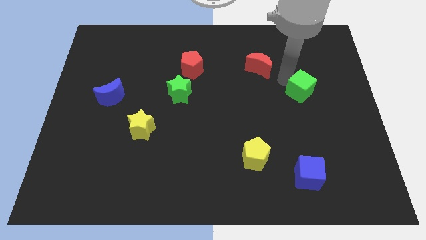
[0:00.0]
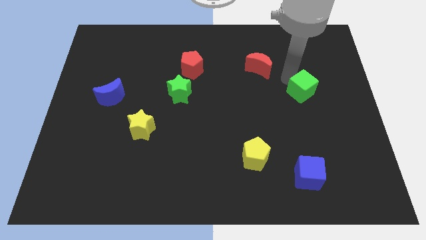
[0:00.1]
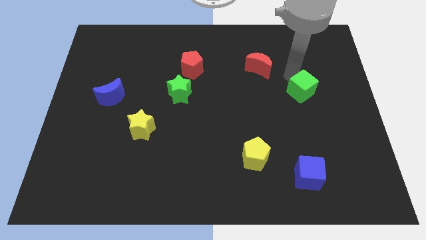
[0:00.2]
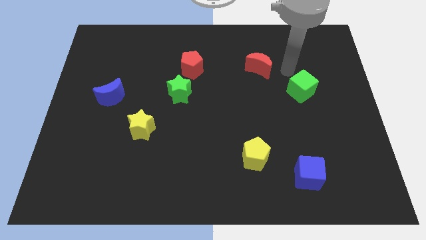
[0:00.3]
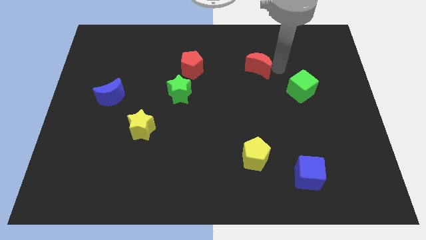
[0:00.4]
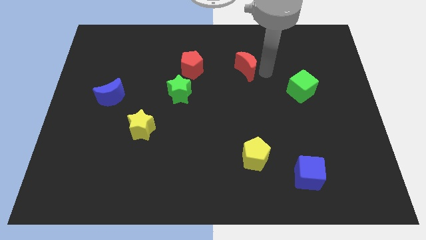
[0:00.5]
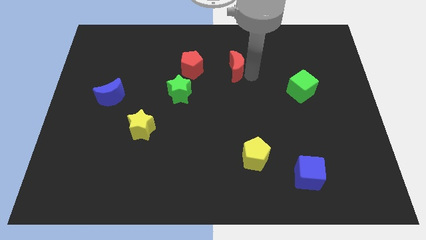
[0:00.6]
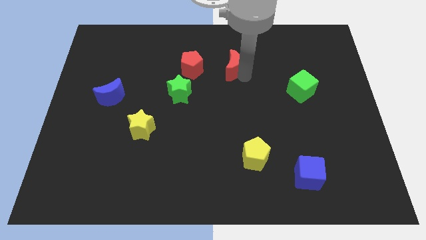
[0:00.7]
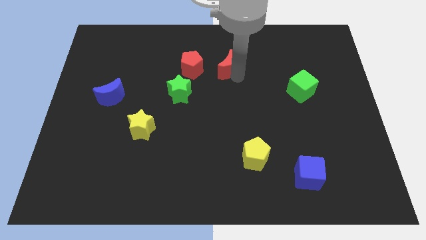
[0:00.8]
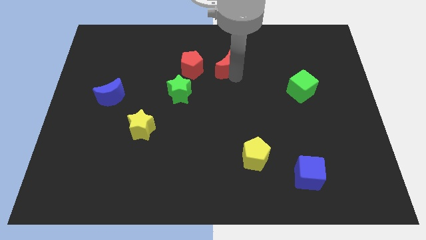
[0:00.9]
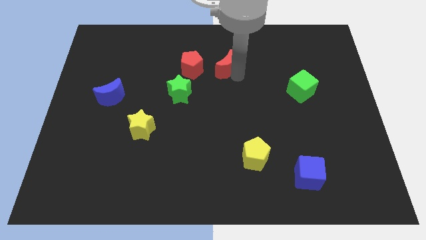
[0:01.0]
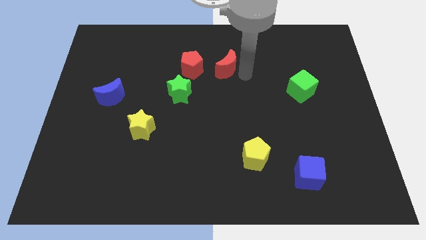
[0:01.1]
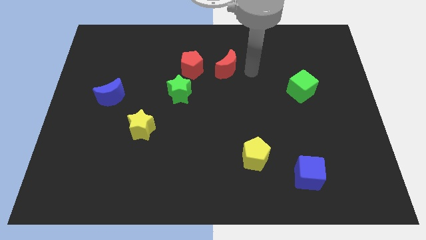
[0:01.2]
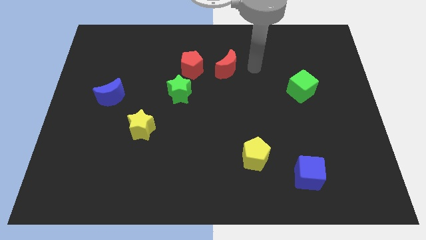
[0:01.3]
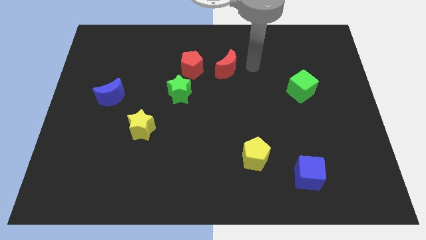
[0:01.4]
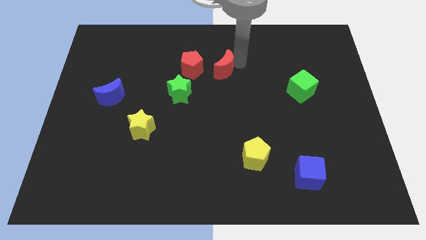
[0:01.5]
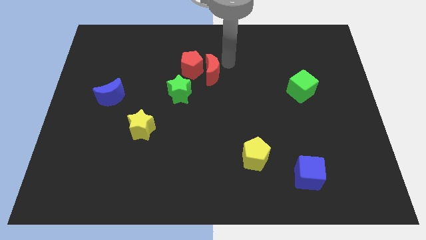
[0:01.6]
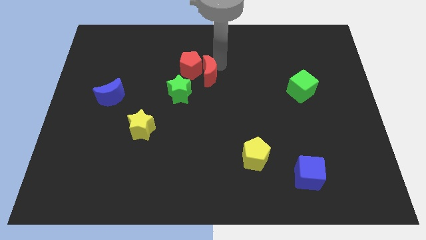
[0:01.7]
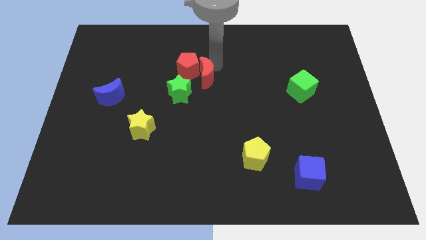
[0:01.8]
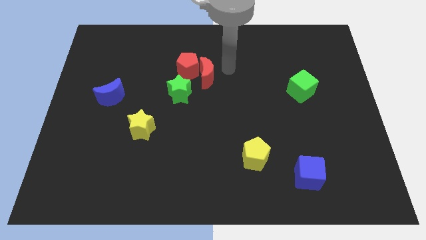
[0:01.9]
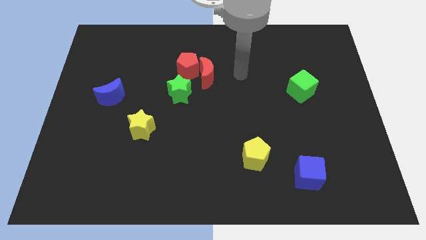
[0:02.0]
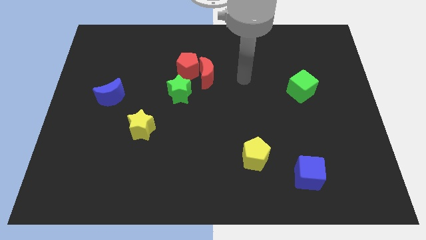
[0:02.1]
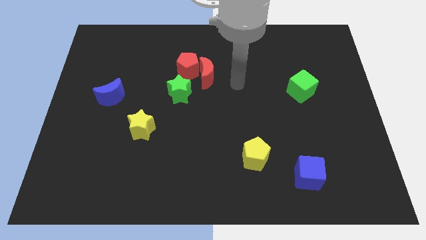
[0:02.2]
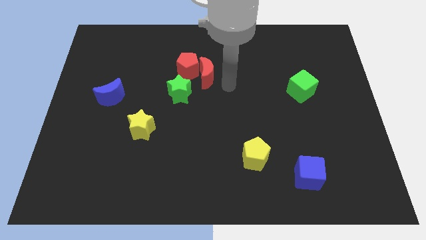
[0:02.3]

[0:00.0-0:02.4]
push the red crescent to the right side of the red pentagon

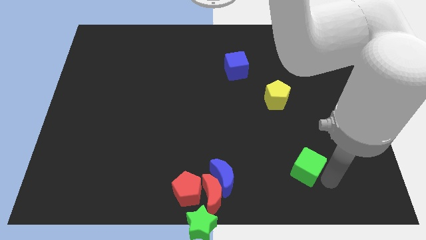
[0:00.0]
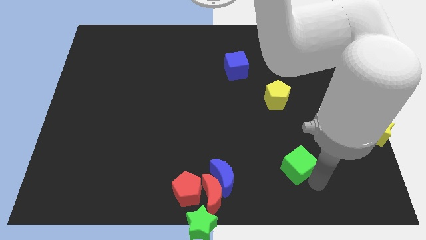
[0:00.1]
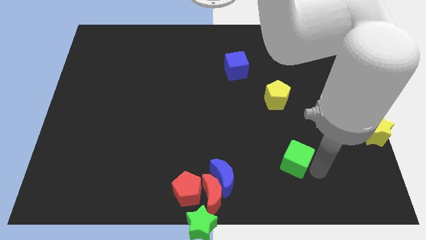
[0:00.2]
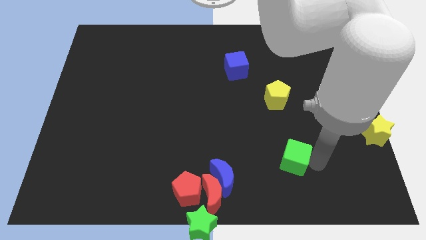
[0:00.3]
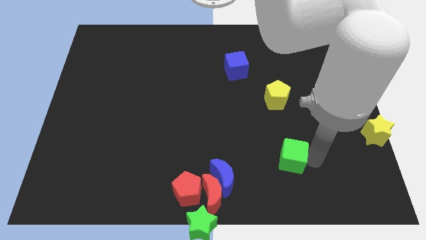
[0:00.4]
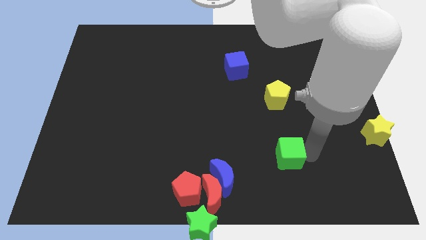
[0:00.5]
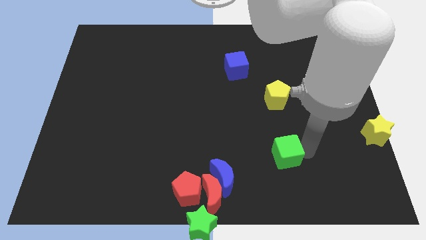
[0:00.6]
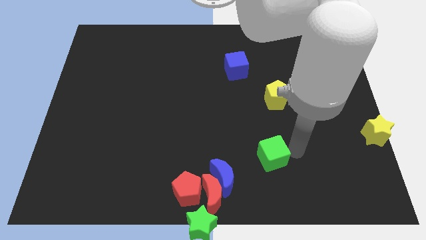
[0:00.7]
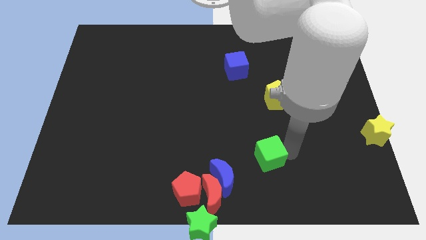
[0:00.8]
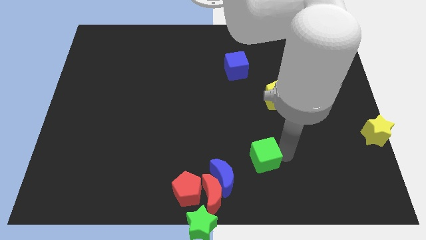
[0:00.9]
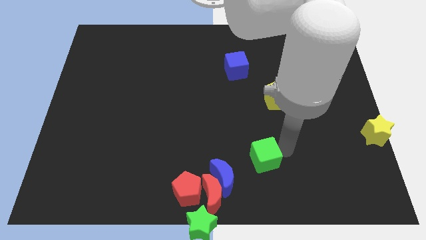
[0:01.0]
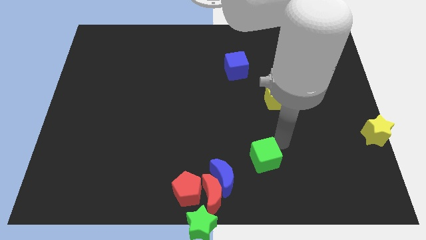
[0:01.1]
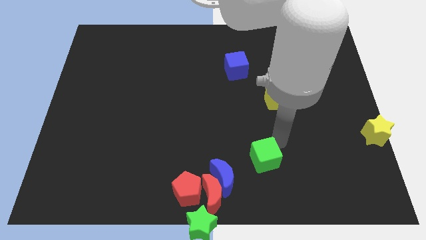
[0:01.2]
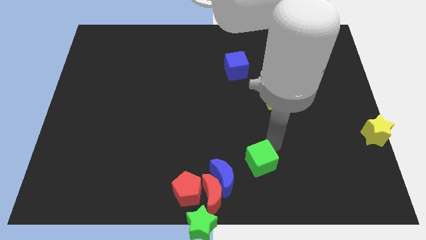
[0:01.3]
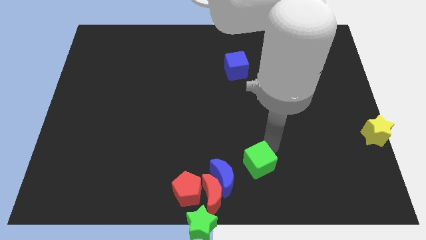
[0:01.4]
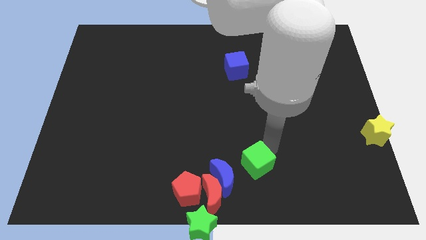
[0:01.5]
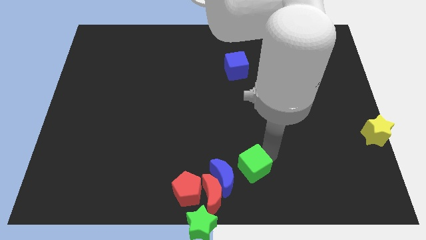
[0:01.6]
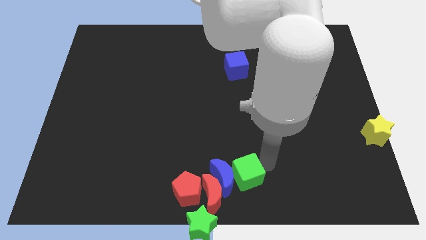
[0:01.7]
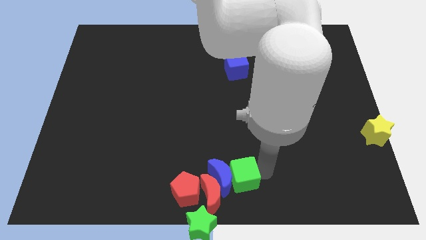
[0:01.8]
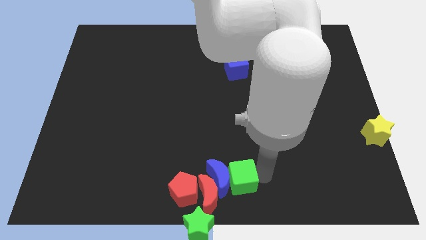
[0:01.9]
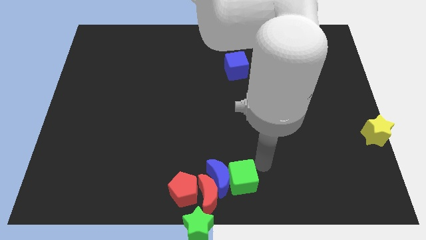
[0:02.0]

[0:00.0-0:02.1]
move the green cube into the blue crescent

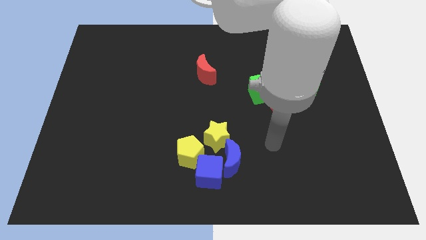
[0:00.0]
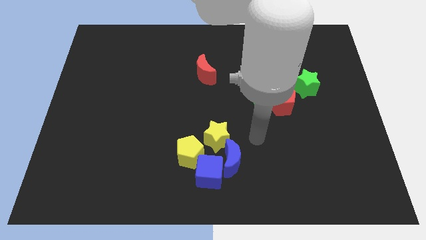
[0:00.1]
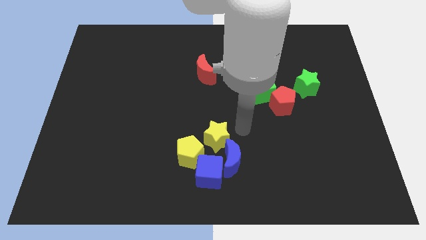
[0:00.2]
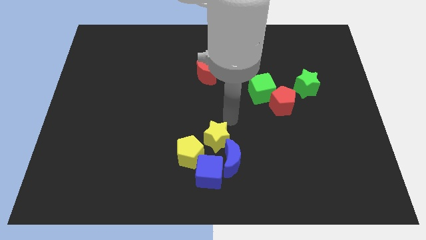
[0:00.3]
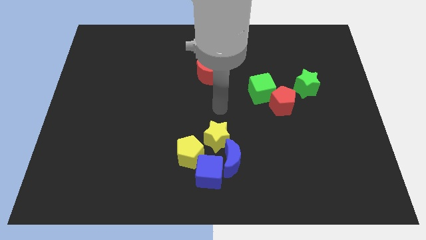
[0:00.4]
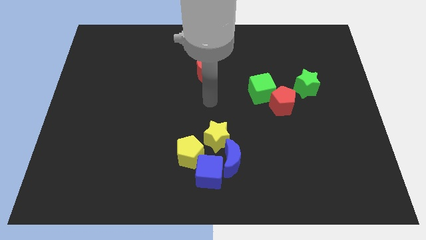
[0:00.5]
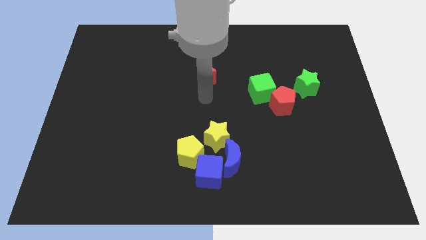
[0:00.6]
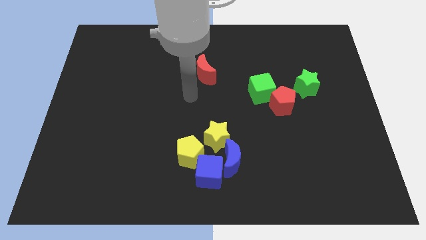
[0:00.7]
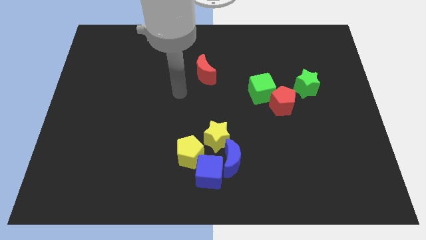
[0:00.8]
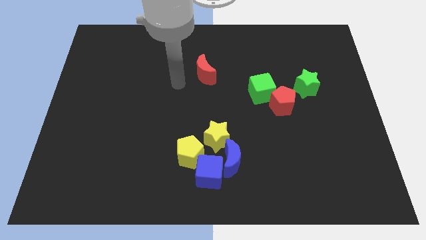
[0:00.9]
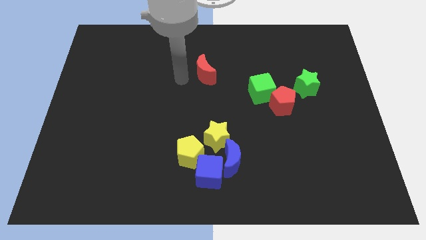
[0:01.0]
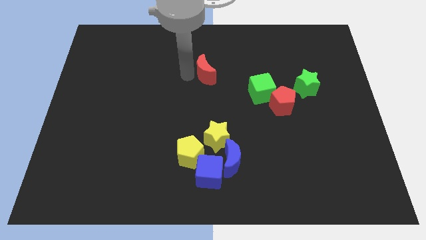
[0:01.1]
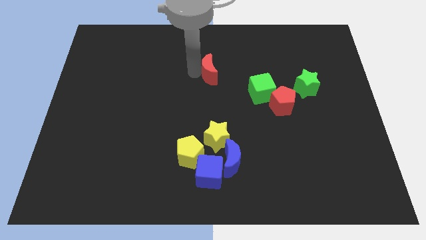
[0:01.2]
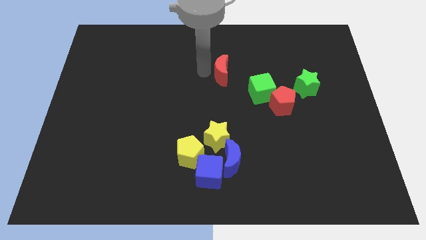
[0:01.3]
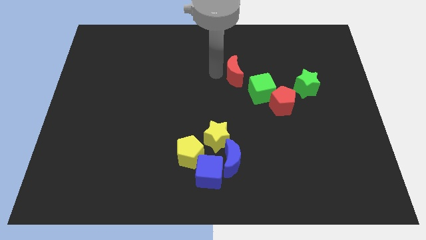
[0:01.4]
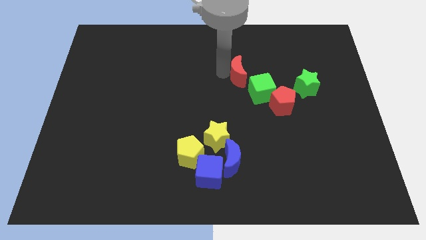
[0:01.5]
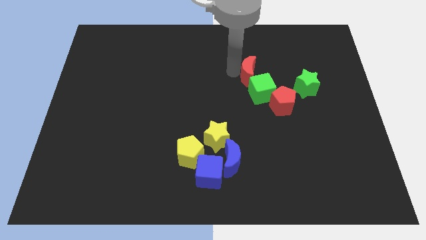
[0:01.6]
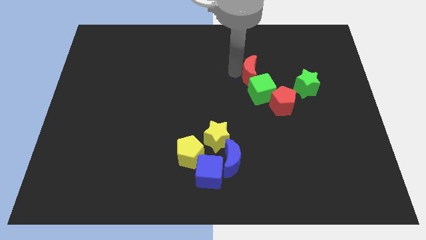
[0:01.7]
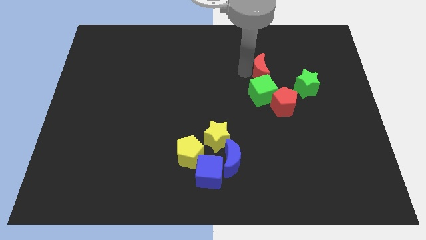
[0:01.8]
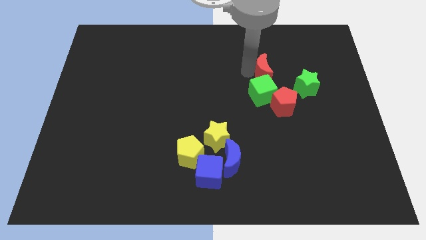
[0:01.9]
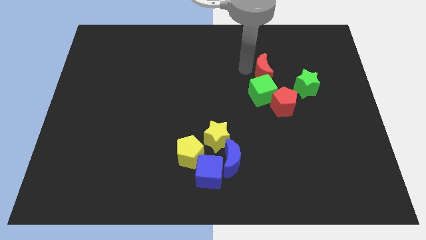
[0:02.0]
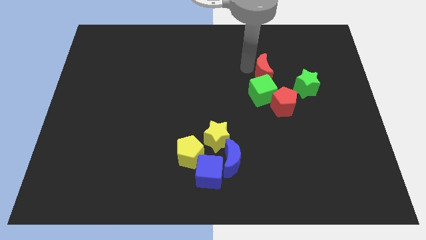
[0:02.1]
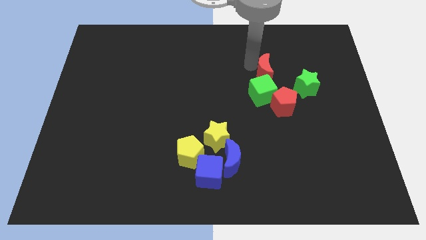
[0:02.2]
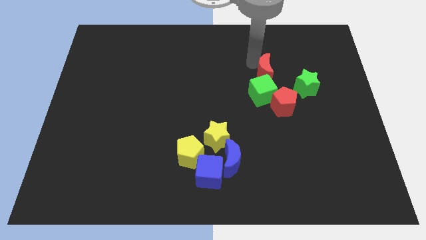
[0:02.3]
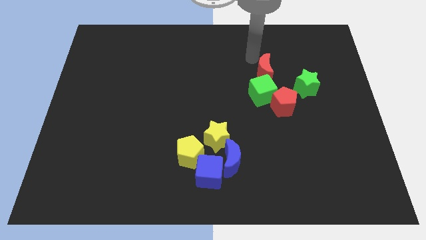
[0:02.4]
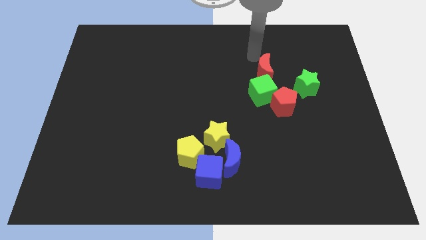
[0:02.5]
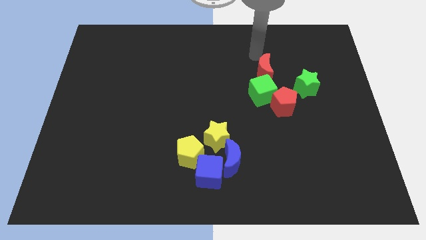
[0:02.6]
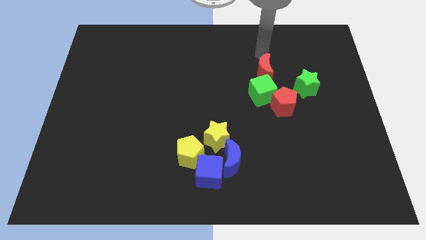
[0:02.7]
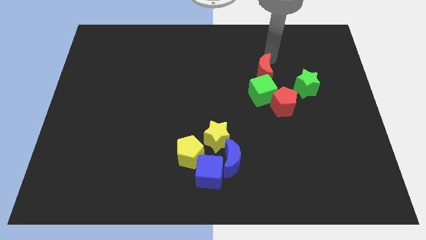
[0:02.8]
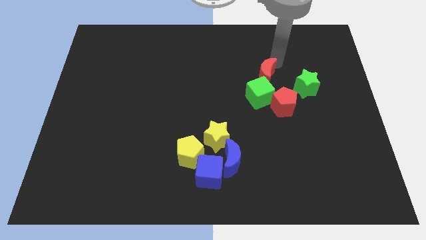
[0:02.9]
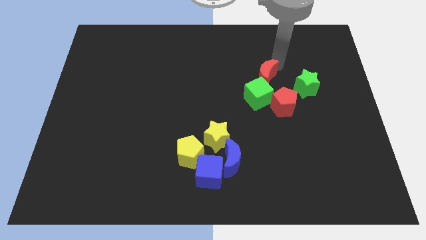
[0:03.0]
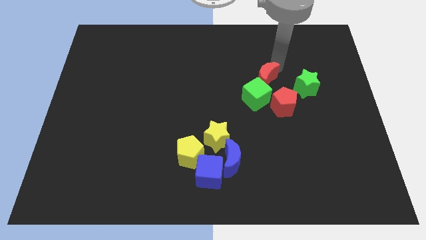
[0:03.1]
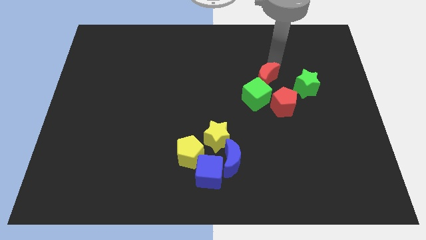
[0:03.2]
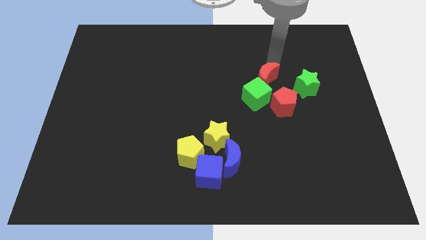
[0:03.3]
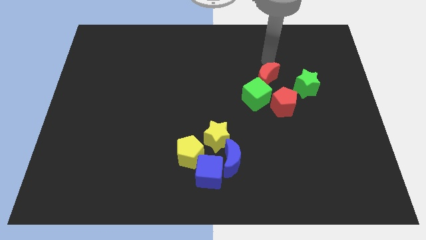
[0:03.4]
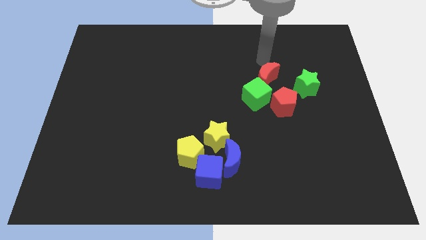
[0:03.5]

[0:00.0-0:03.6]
place the red crescent towards the top right side of the green cube

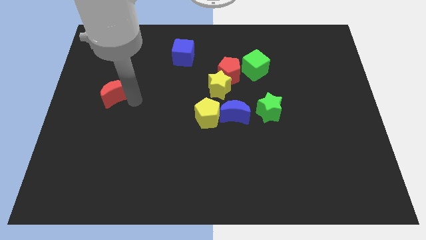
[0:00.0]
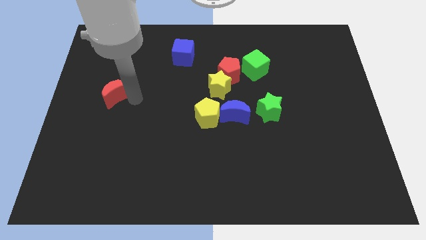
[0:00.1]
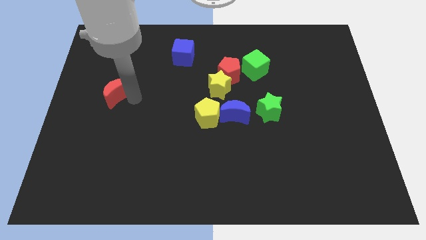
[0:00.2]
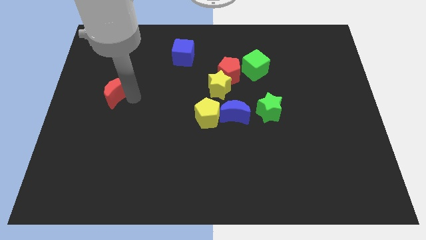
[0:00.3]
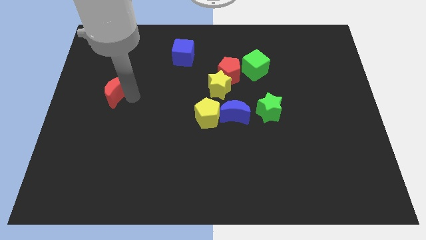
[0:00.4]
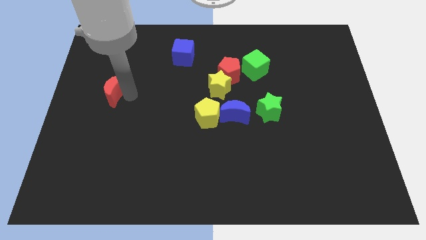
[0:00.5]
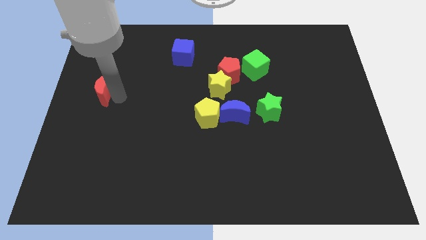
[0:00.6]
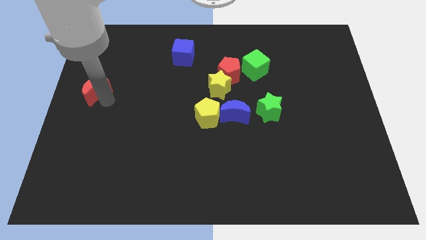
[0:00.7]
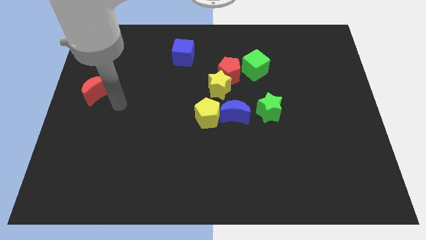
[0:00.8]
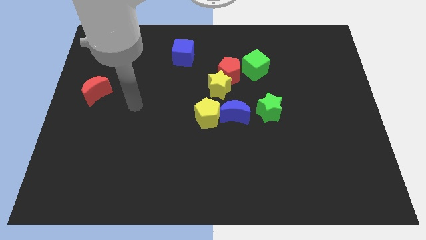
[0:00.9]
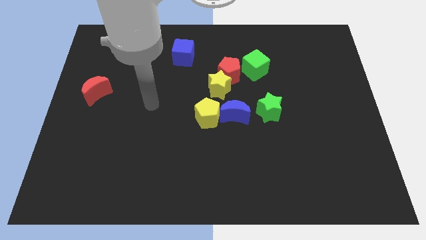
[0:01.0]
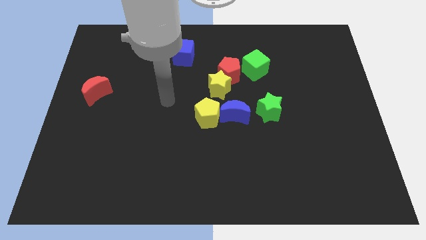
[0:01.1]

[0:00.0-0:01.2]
slightly move the red crescent to the left of the board
